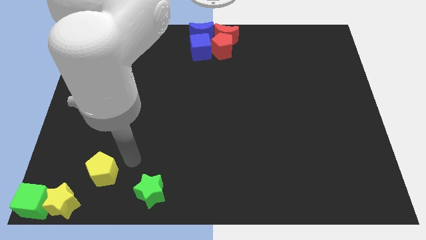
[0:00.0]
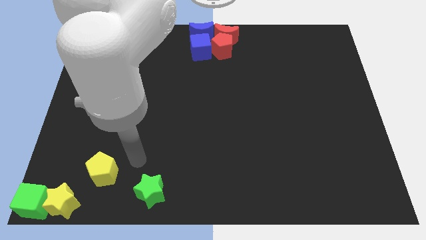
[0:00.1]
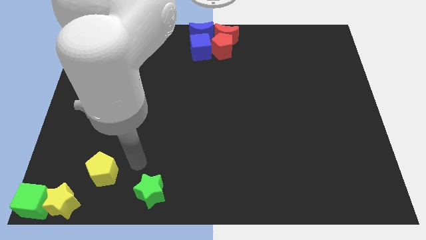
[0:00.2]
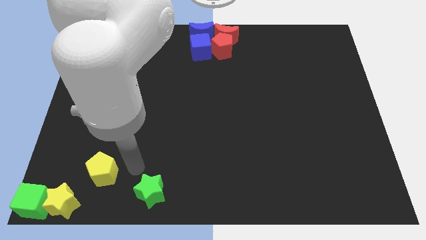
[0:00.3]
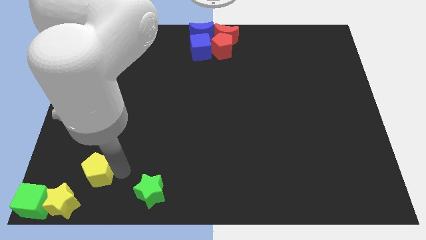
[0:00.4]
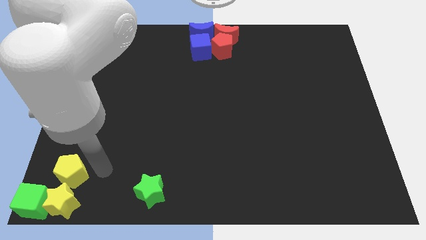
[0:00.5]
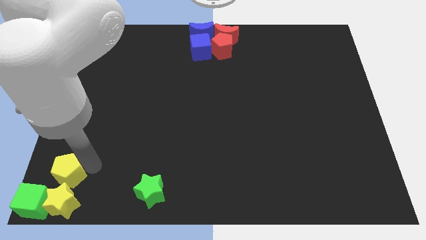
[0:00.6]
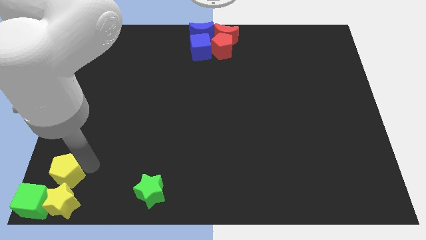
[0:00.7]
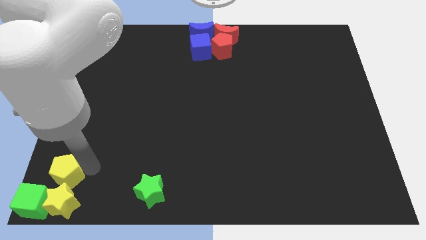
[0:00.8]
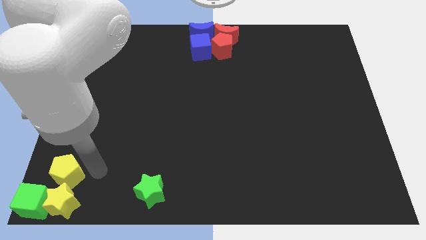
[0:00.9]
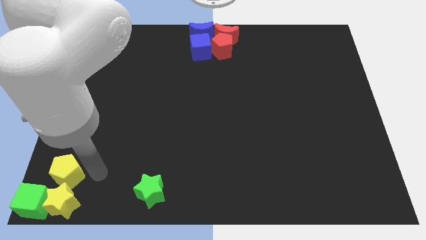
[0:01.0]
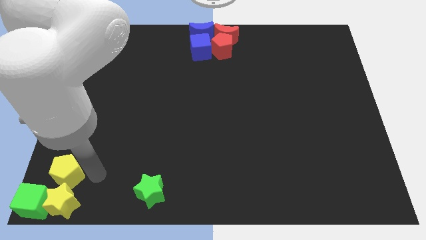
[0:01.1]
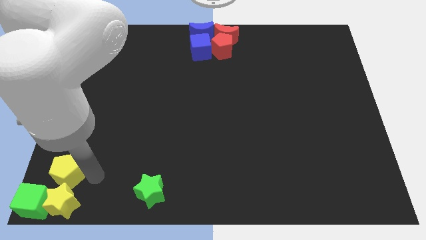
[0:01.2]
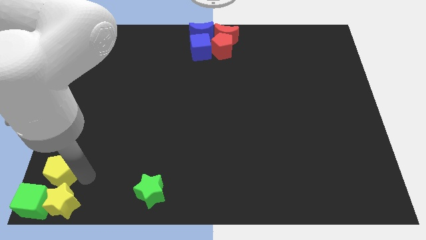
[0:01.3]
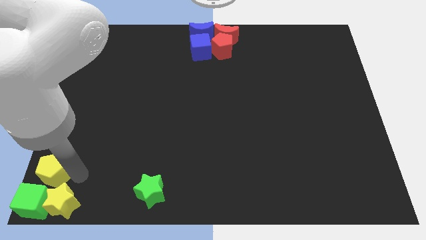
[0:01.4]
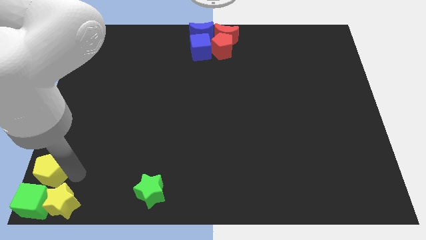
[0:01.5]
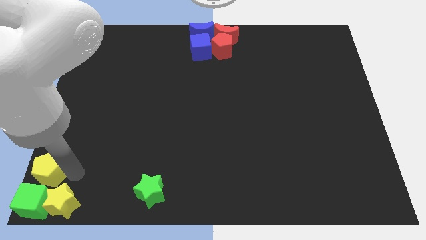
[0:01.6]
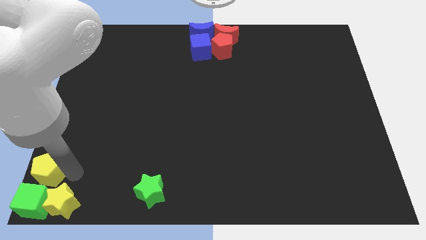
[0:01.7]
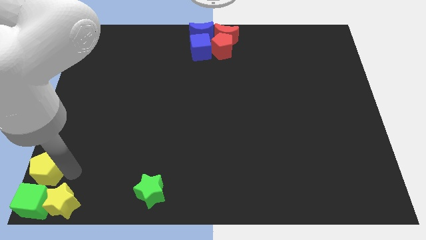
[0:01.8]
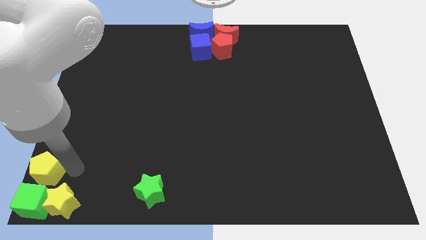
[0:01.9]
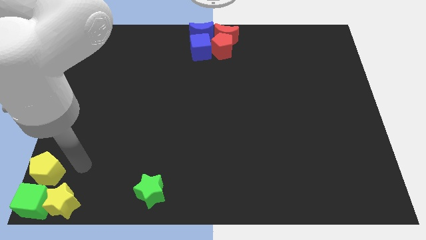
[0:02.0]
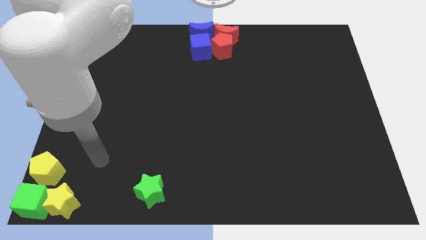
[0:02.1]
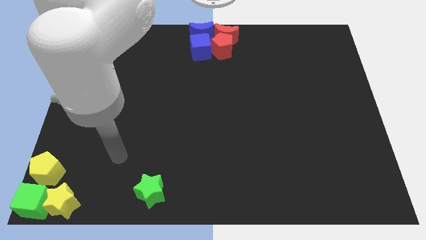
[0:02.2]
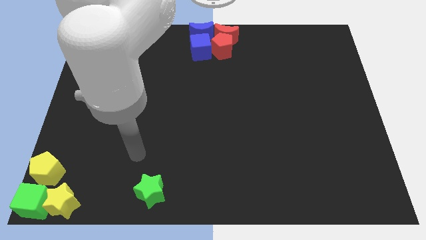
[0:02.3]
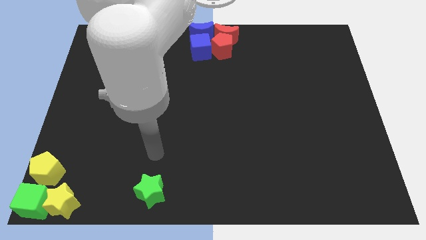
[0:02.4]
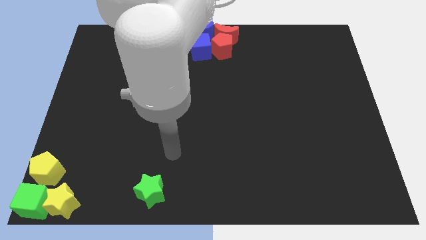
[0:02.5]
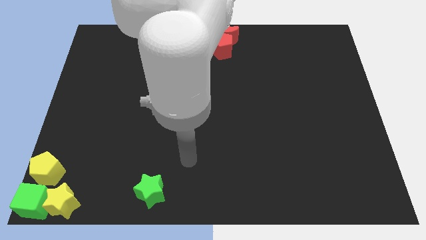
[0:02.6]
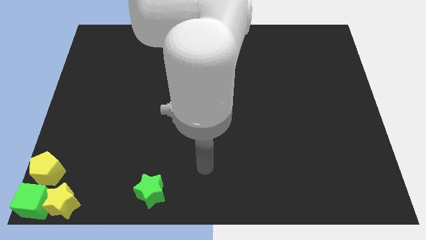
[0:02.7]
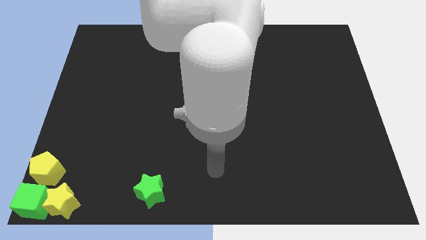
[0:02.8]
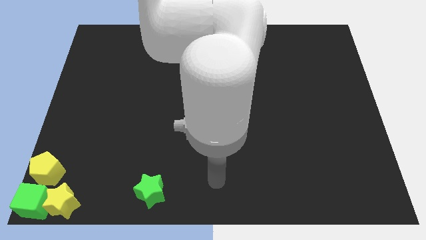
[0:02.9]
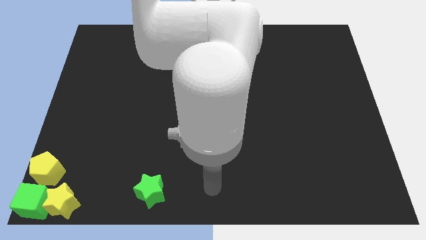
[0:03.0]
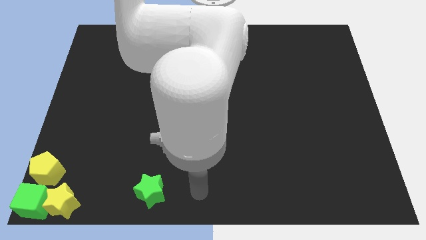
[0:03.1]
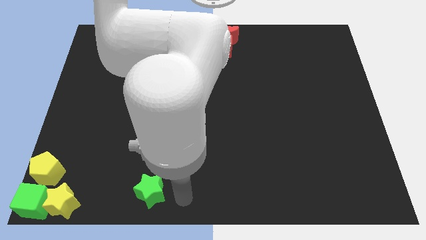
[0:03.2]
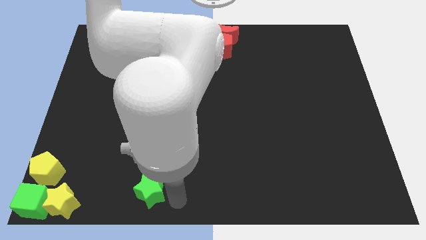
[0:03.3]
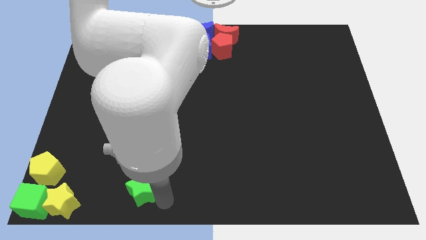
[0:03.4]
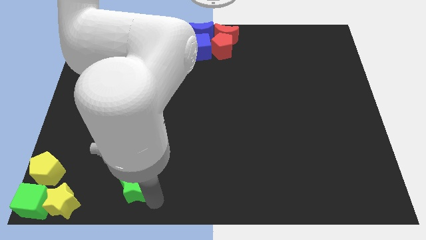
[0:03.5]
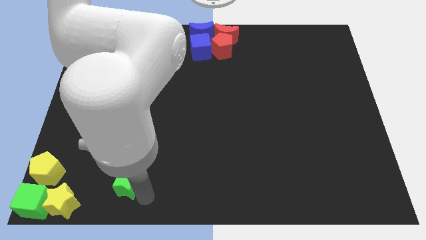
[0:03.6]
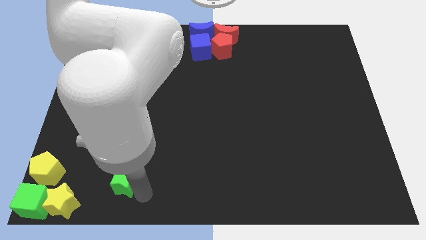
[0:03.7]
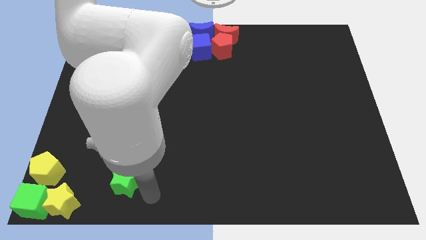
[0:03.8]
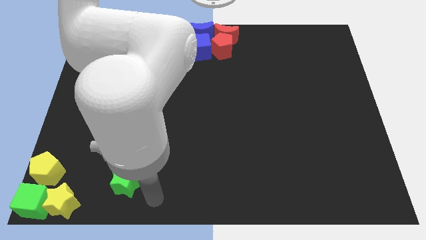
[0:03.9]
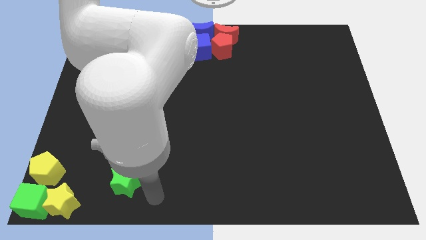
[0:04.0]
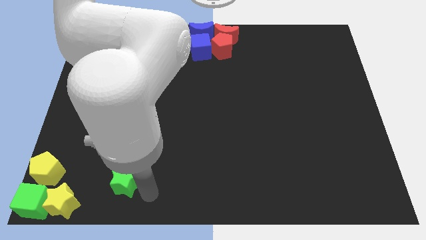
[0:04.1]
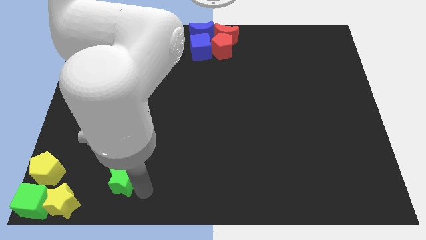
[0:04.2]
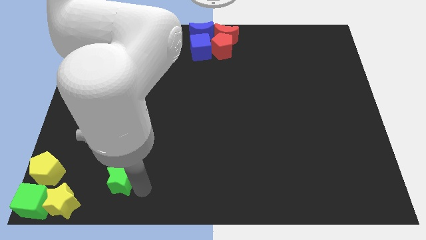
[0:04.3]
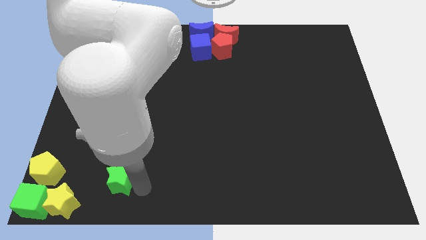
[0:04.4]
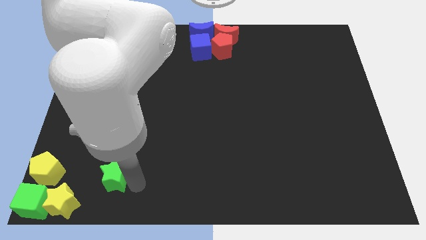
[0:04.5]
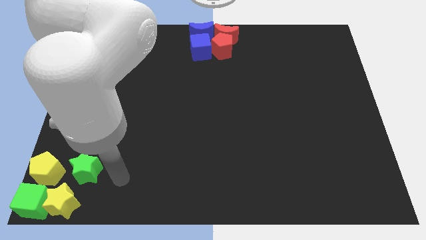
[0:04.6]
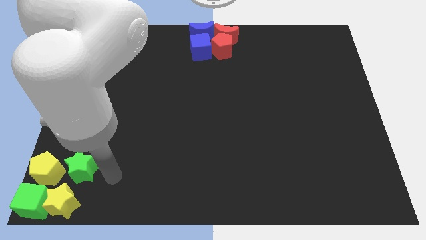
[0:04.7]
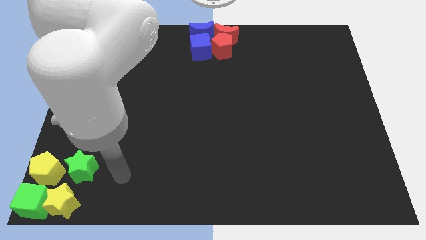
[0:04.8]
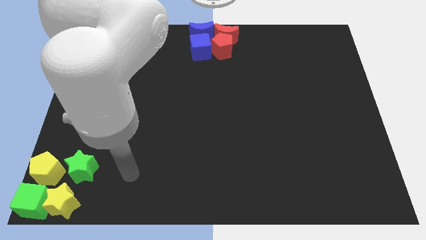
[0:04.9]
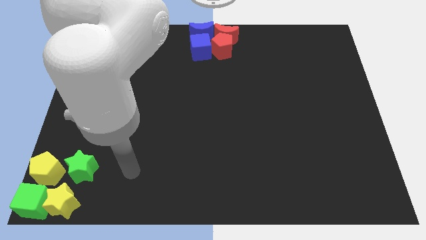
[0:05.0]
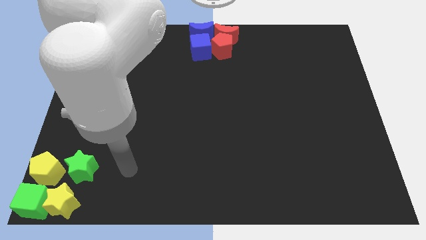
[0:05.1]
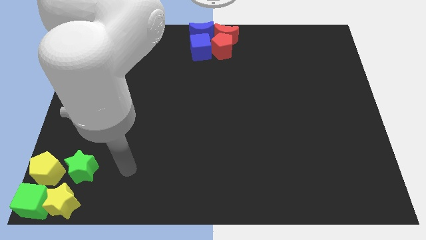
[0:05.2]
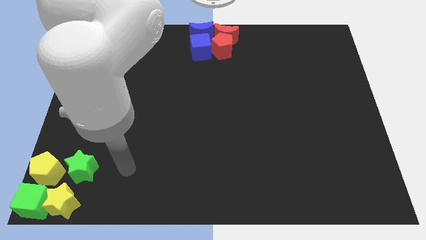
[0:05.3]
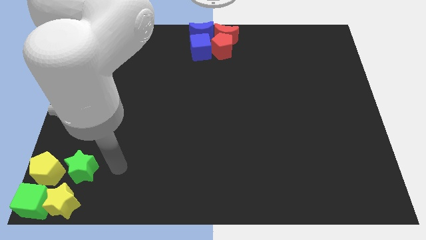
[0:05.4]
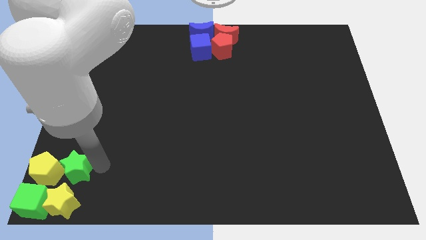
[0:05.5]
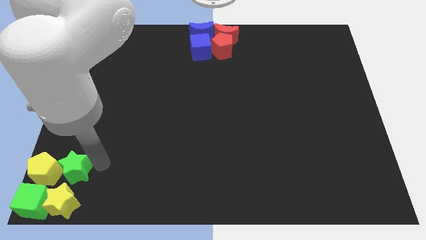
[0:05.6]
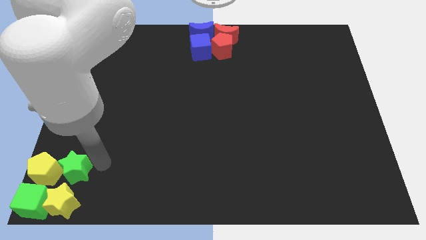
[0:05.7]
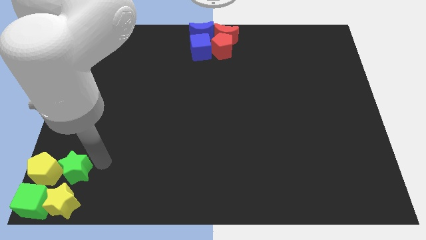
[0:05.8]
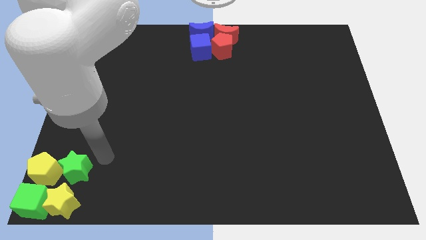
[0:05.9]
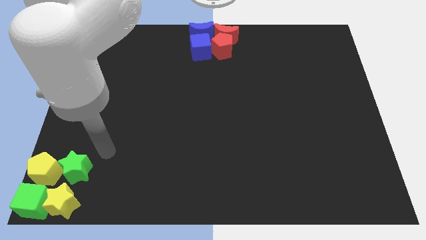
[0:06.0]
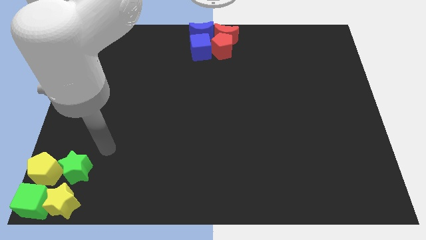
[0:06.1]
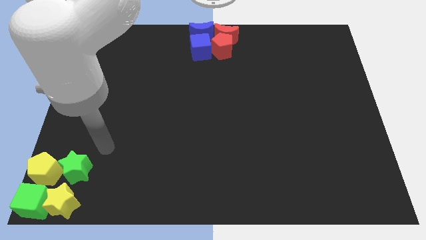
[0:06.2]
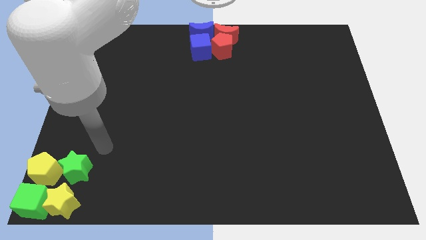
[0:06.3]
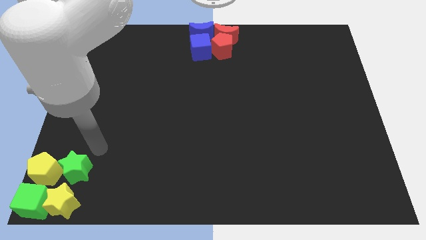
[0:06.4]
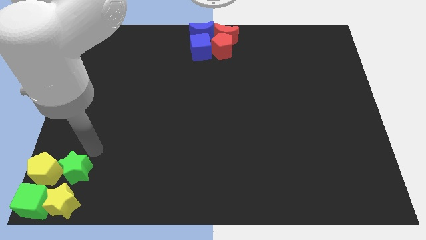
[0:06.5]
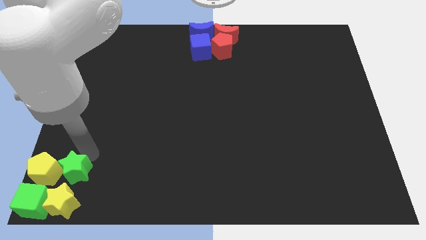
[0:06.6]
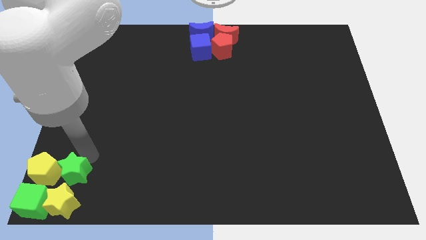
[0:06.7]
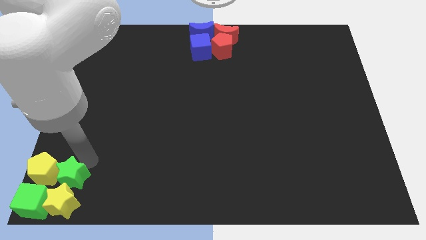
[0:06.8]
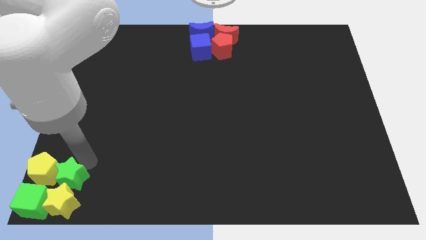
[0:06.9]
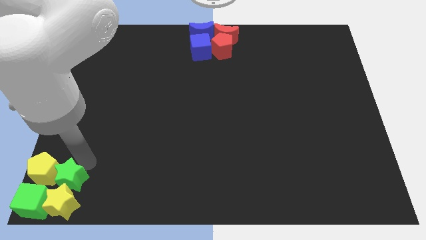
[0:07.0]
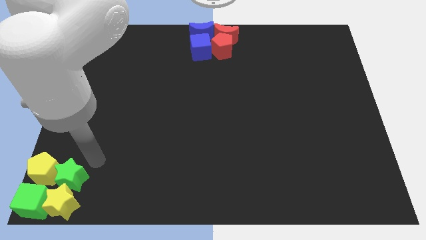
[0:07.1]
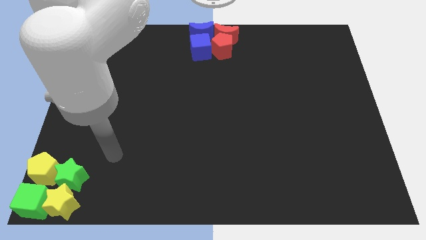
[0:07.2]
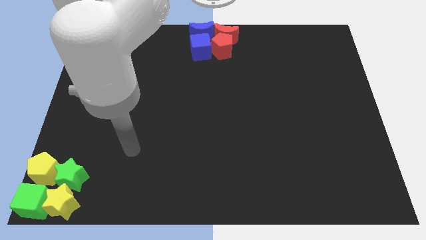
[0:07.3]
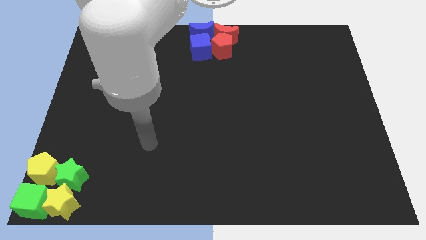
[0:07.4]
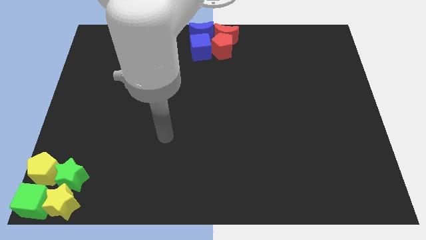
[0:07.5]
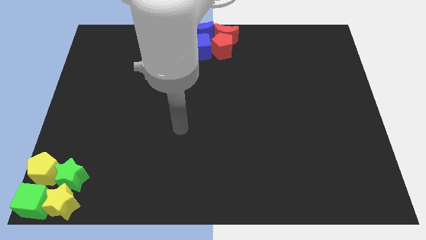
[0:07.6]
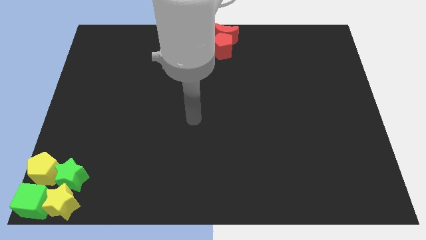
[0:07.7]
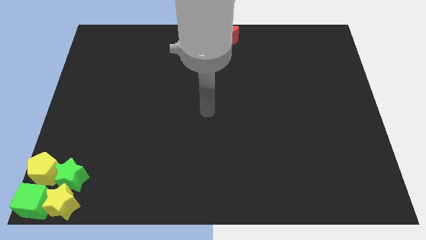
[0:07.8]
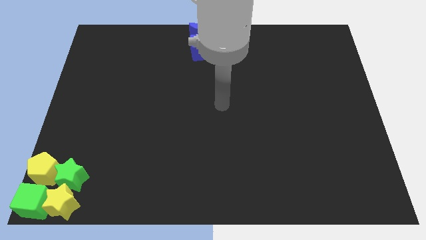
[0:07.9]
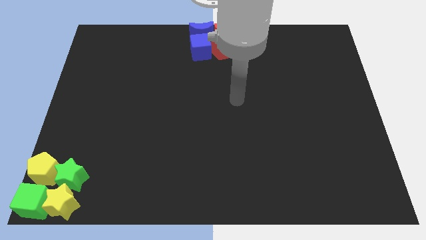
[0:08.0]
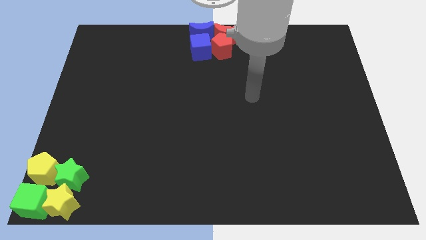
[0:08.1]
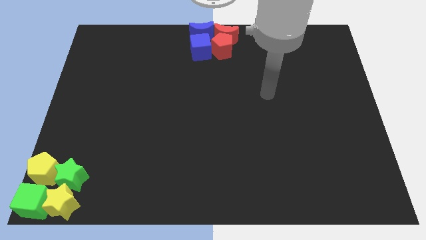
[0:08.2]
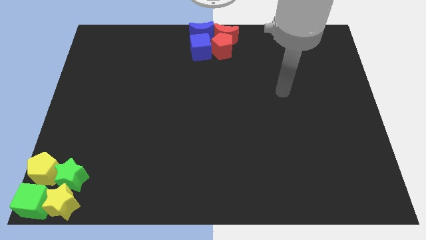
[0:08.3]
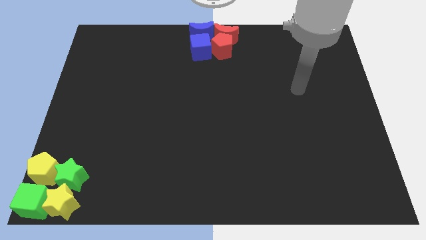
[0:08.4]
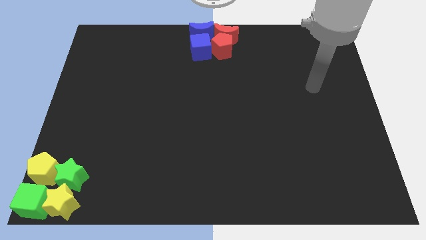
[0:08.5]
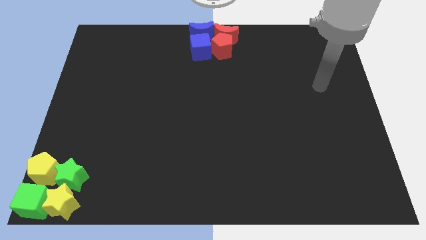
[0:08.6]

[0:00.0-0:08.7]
push the yellow pentagon and the green star towards the bottom left corner of the board

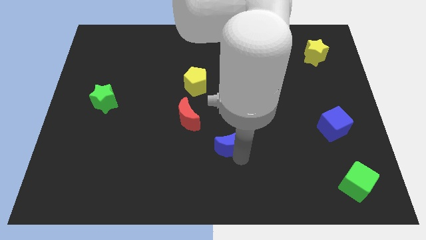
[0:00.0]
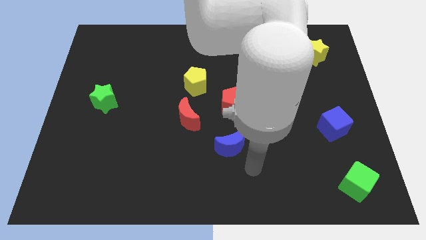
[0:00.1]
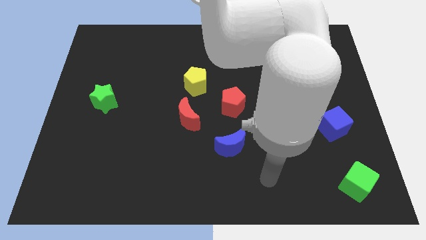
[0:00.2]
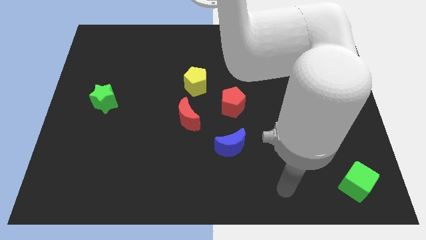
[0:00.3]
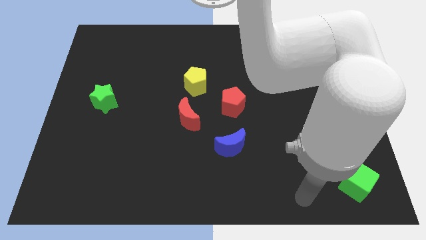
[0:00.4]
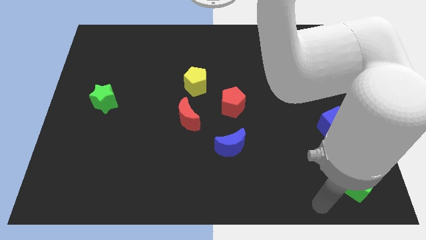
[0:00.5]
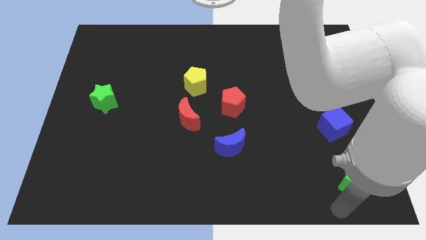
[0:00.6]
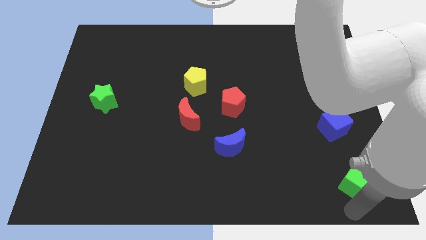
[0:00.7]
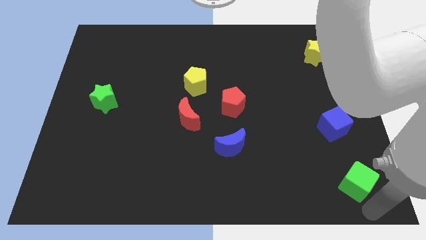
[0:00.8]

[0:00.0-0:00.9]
move your arm to the bottom of the green cube
